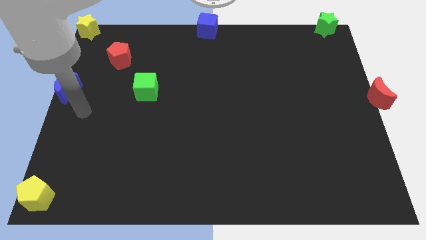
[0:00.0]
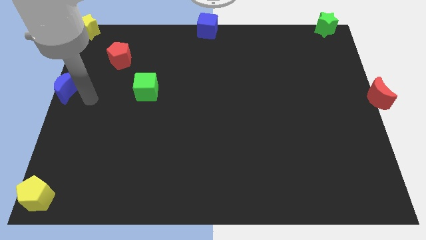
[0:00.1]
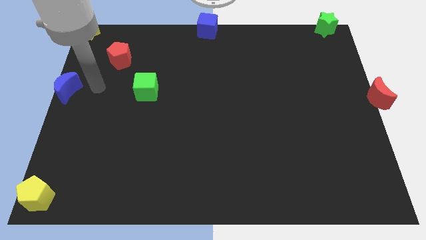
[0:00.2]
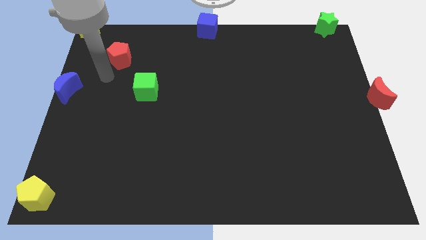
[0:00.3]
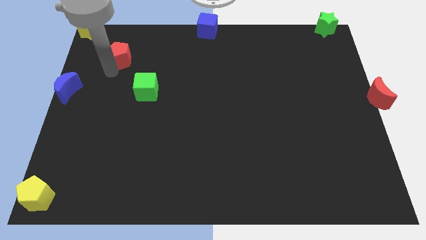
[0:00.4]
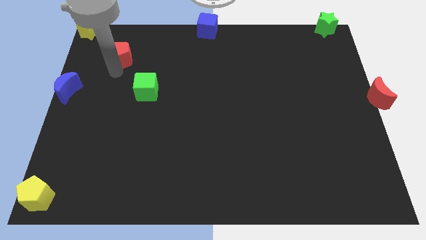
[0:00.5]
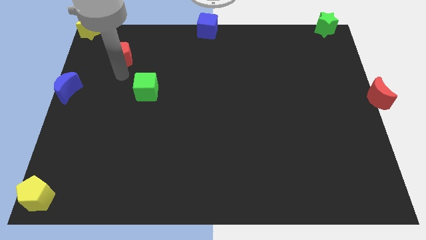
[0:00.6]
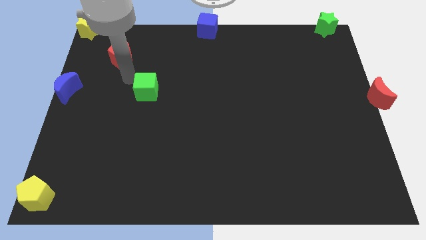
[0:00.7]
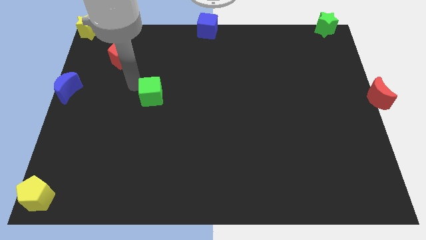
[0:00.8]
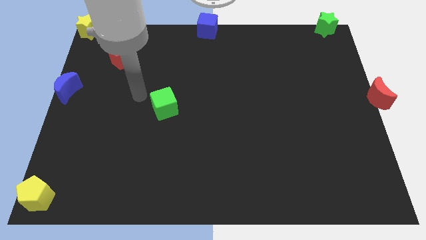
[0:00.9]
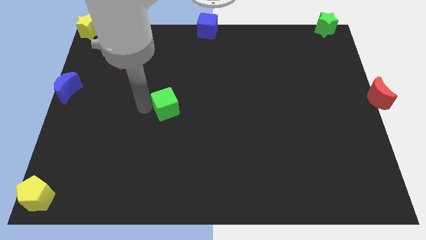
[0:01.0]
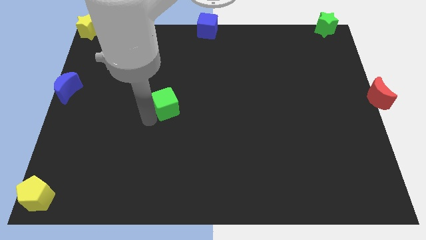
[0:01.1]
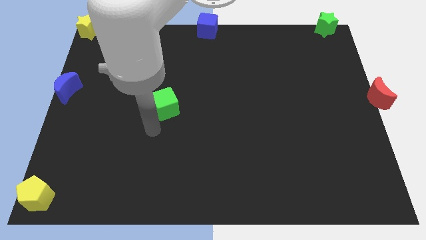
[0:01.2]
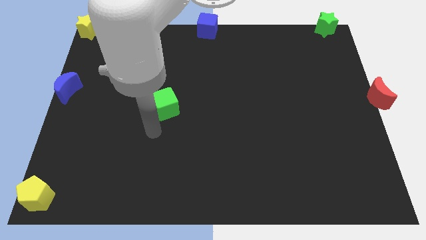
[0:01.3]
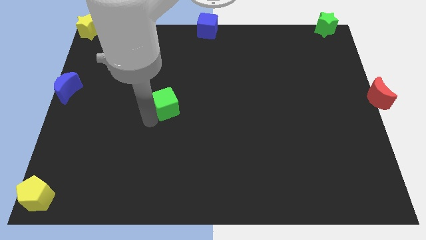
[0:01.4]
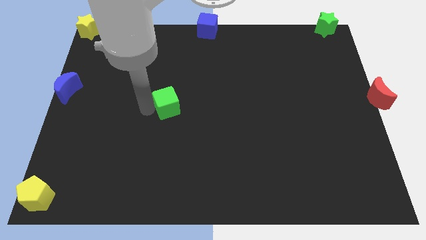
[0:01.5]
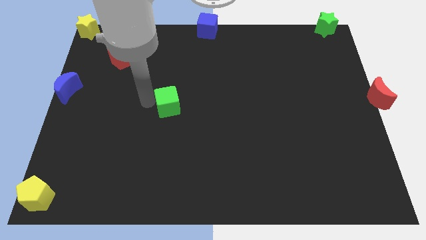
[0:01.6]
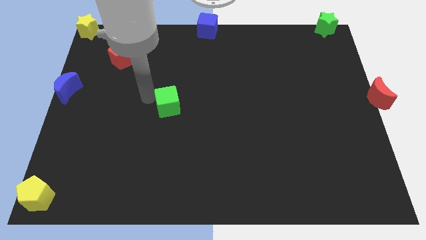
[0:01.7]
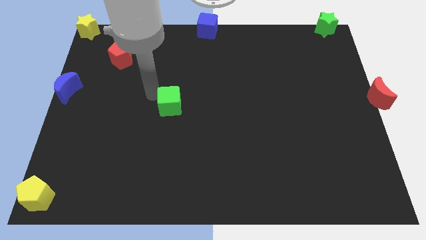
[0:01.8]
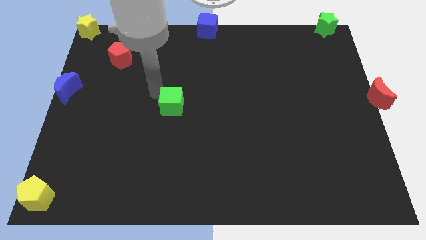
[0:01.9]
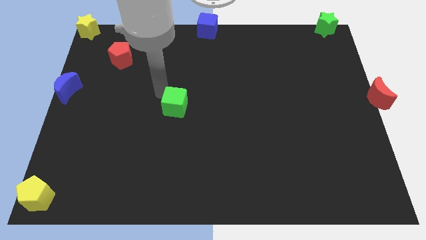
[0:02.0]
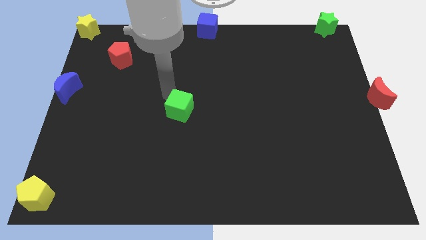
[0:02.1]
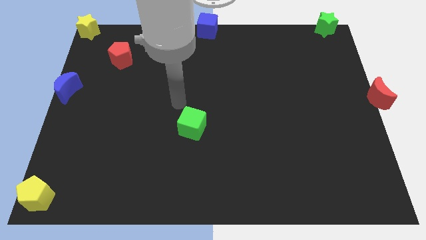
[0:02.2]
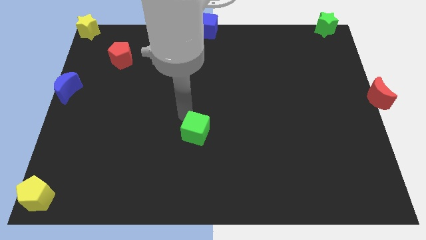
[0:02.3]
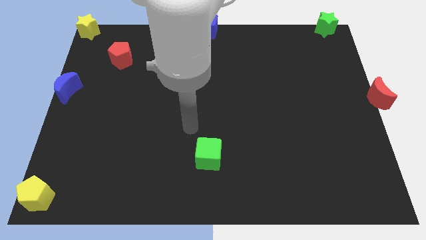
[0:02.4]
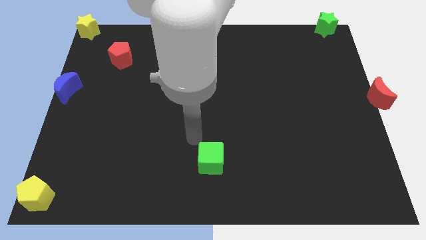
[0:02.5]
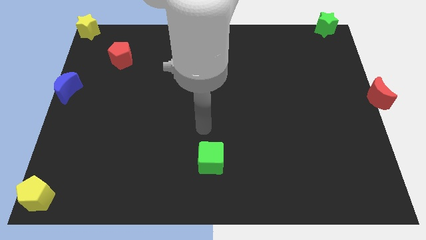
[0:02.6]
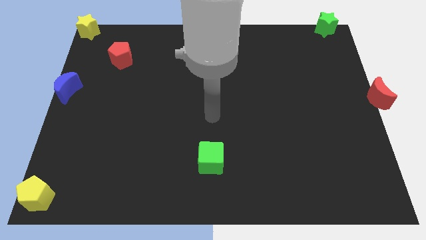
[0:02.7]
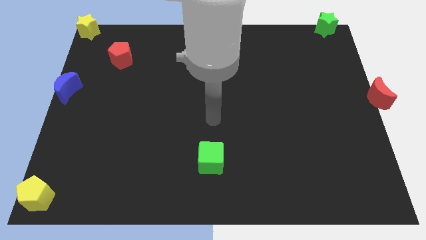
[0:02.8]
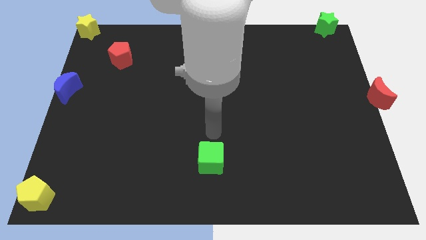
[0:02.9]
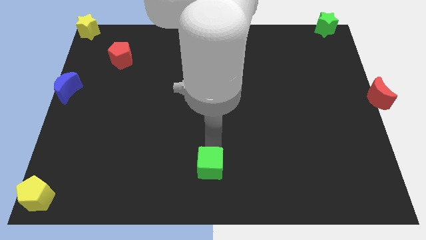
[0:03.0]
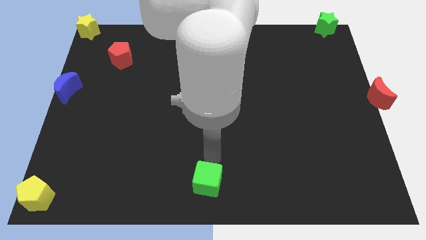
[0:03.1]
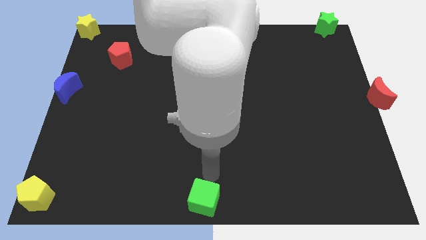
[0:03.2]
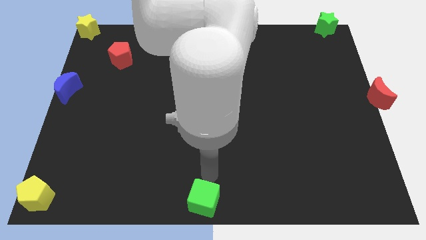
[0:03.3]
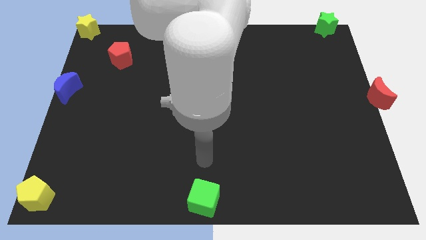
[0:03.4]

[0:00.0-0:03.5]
push green cube towards bottom middle of the board

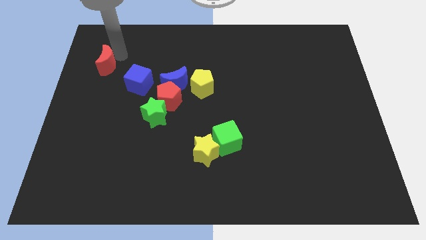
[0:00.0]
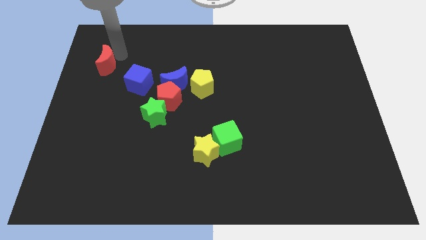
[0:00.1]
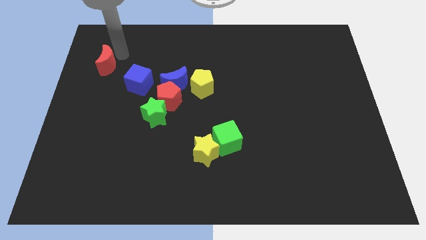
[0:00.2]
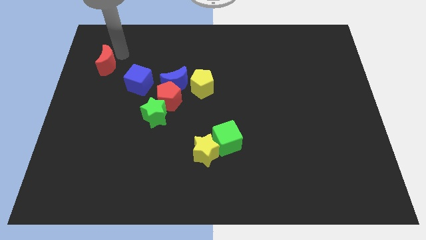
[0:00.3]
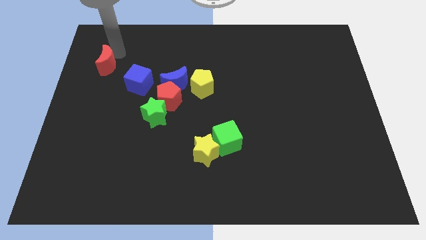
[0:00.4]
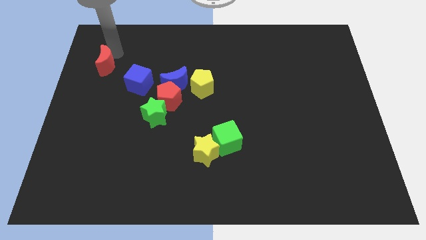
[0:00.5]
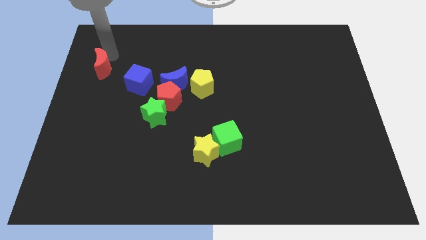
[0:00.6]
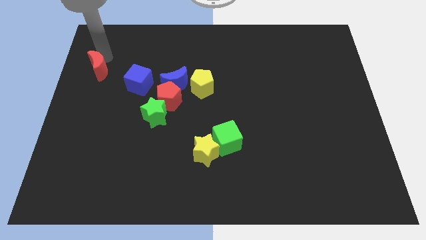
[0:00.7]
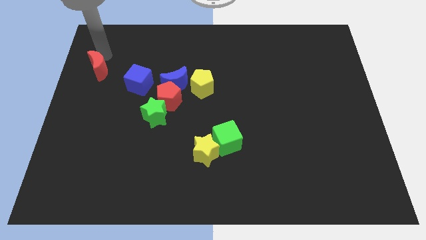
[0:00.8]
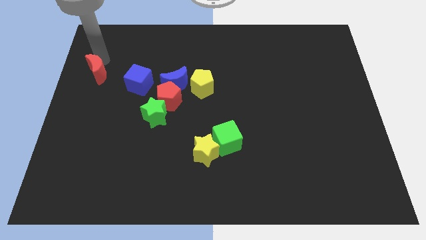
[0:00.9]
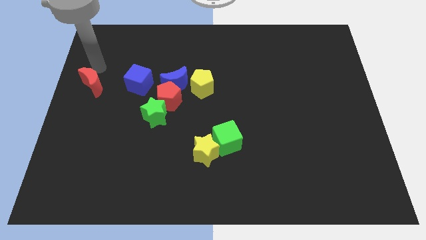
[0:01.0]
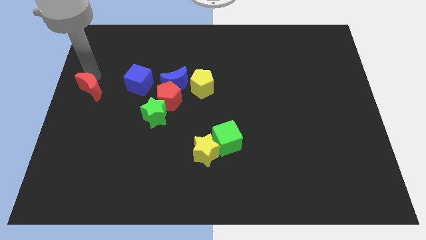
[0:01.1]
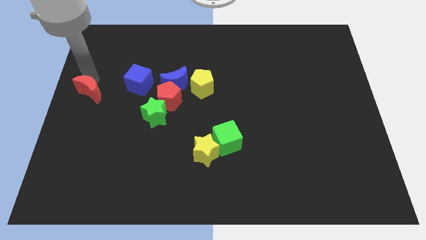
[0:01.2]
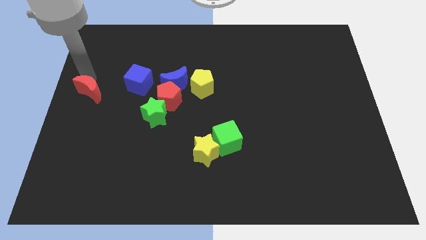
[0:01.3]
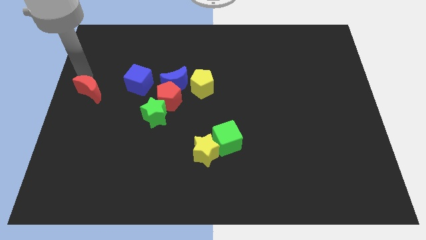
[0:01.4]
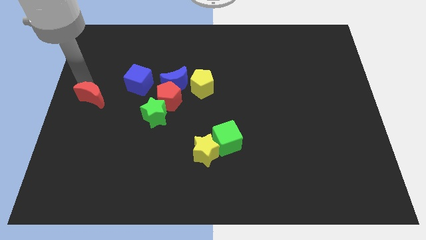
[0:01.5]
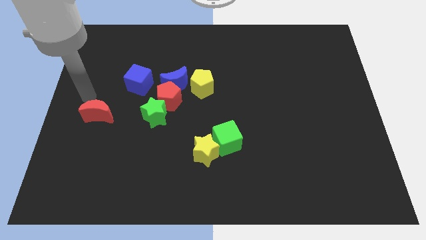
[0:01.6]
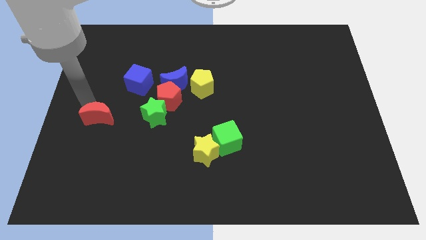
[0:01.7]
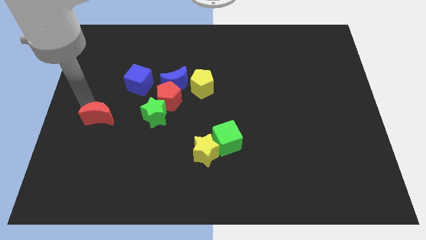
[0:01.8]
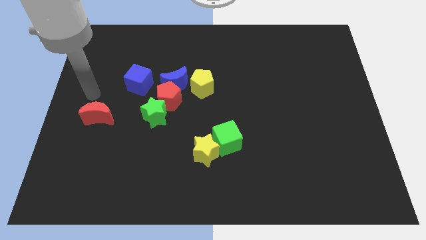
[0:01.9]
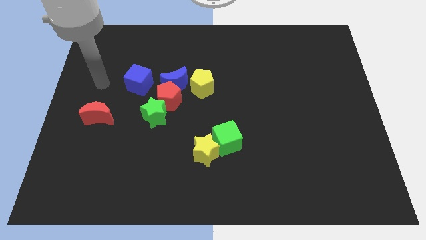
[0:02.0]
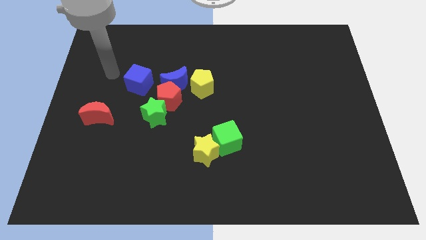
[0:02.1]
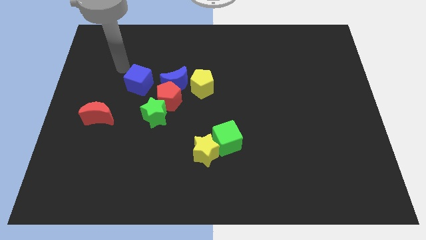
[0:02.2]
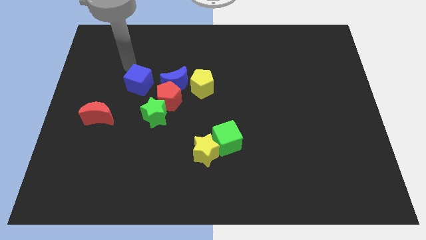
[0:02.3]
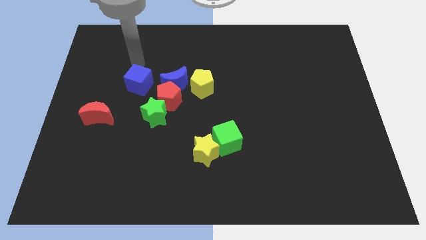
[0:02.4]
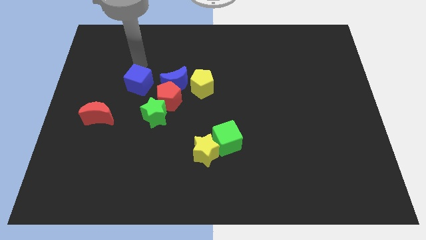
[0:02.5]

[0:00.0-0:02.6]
push the red moon to the parallel left of the green star

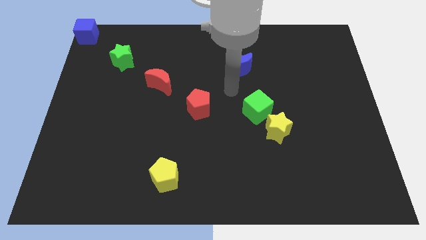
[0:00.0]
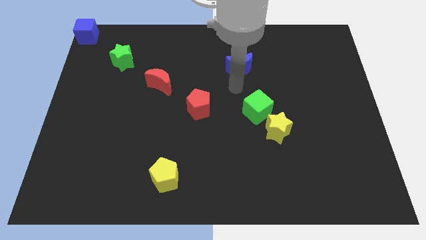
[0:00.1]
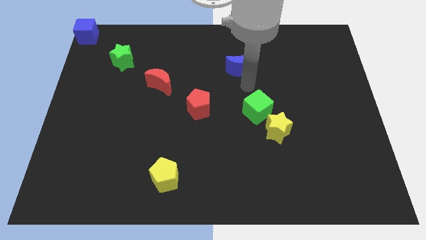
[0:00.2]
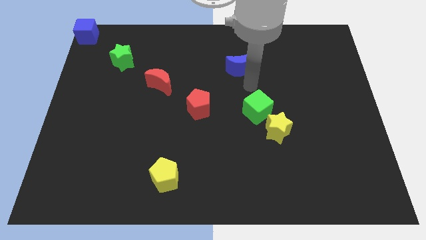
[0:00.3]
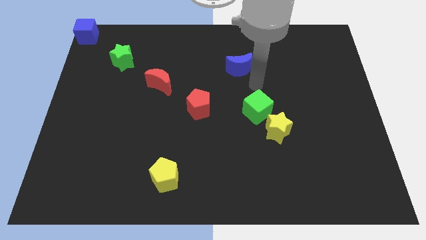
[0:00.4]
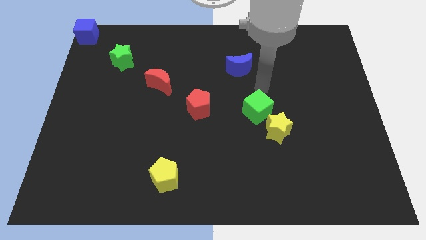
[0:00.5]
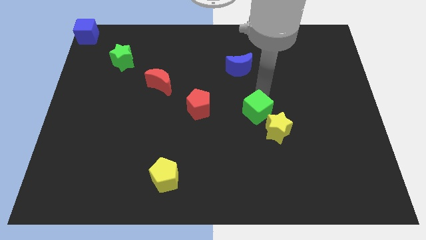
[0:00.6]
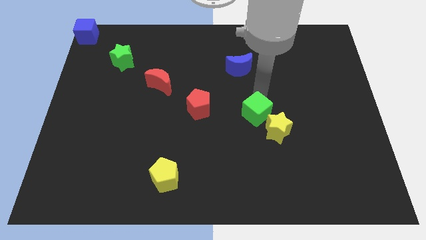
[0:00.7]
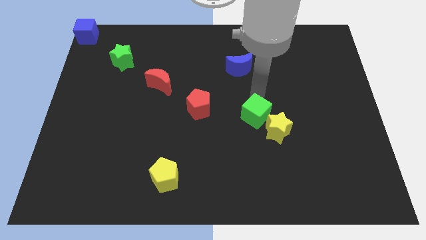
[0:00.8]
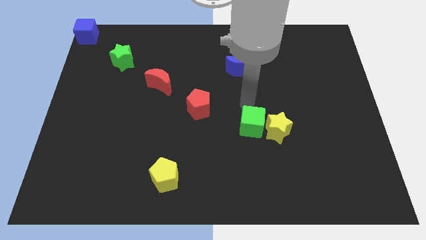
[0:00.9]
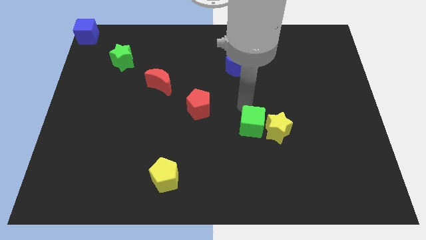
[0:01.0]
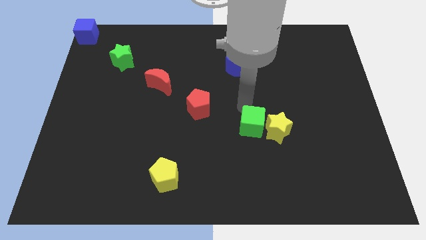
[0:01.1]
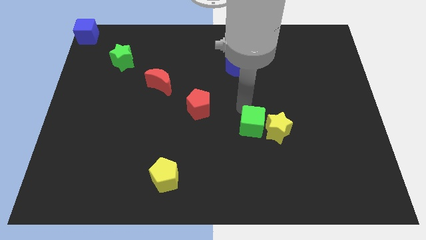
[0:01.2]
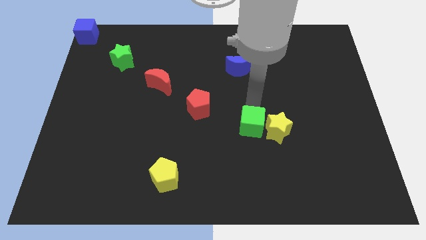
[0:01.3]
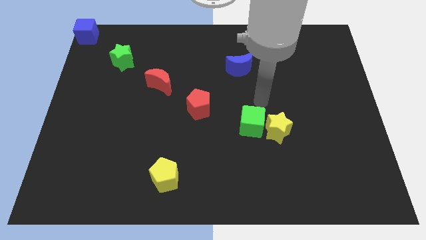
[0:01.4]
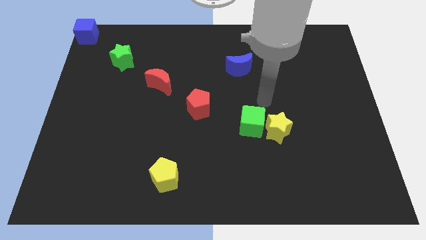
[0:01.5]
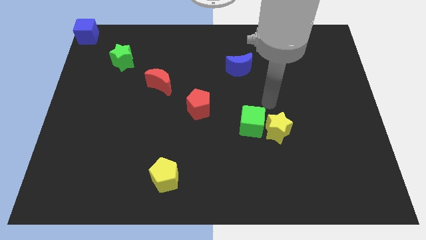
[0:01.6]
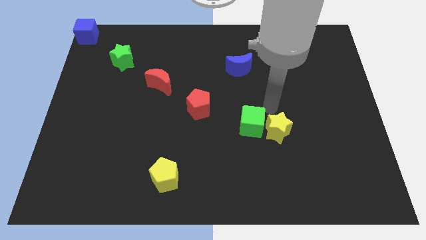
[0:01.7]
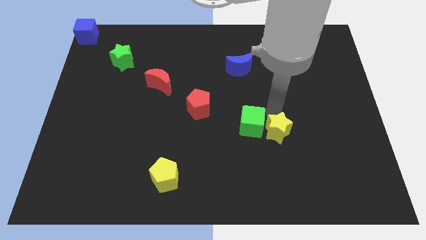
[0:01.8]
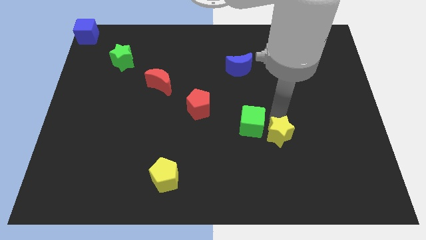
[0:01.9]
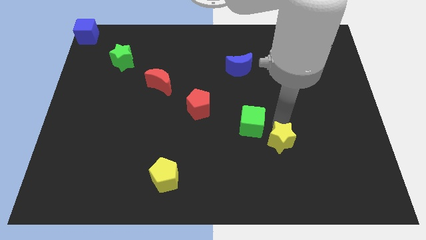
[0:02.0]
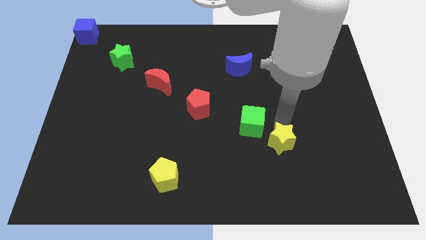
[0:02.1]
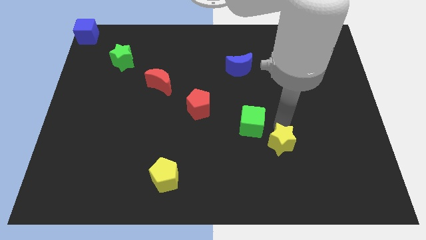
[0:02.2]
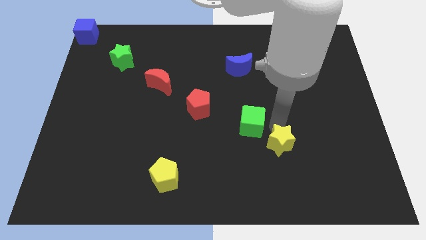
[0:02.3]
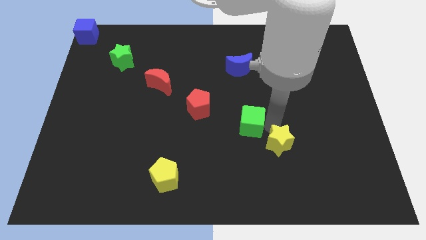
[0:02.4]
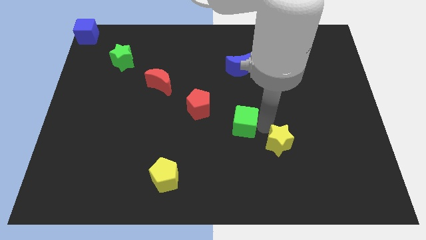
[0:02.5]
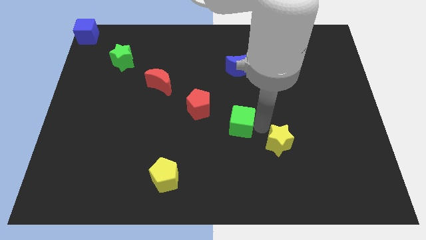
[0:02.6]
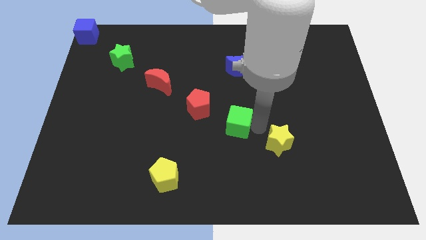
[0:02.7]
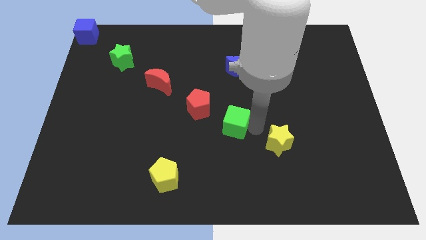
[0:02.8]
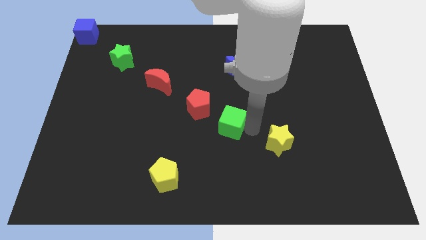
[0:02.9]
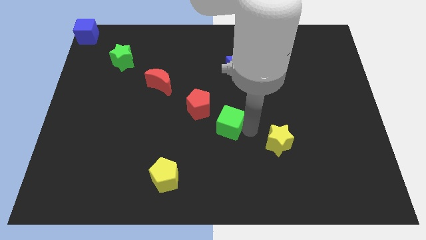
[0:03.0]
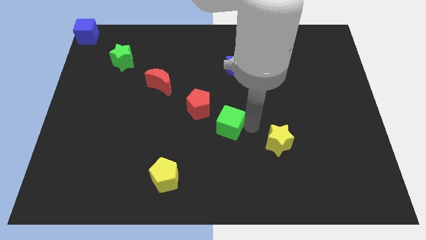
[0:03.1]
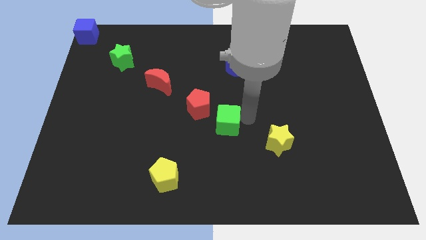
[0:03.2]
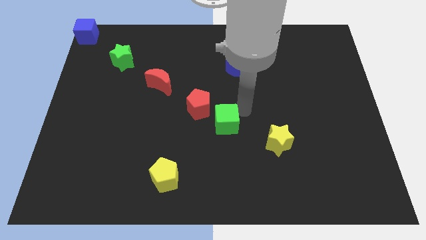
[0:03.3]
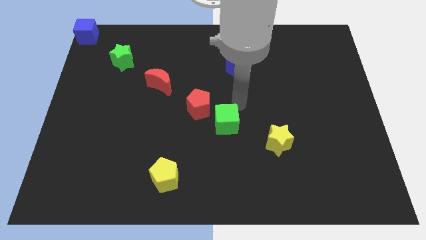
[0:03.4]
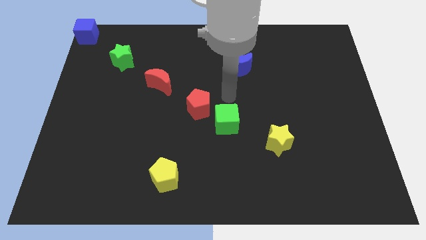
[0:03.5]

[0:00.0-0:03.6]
move the green star to the diagonally right side of the red pentagon
